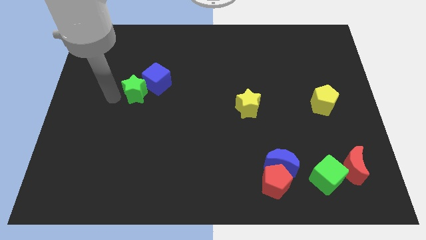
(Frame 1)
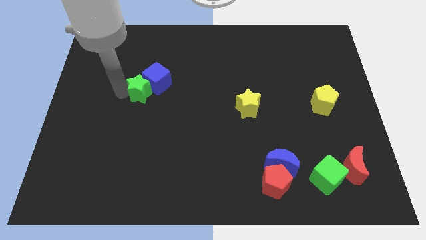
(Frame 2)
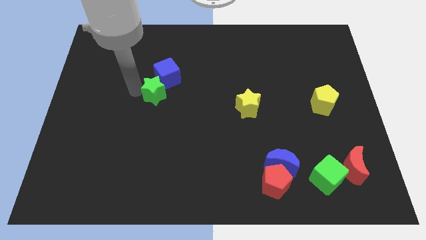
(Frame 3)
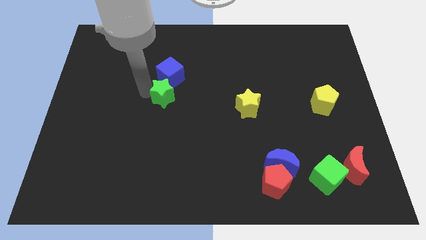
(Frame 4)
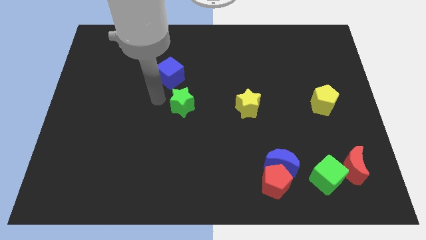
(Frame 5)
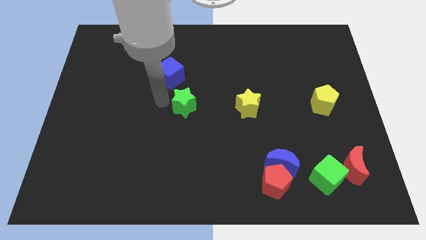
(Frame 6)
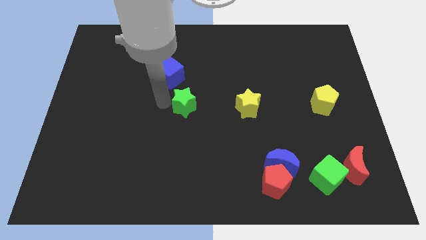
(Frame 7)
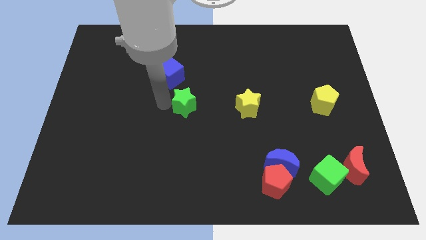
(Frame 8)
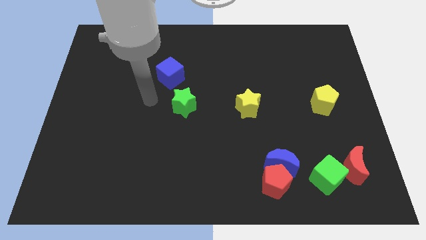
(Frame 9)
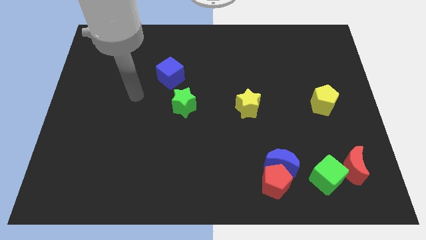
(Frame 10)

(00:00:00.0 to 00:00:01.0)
place the green star below the blue cube

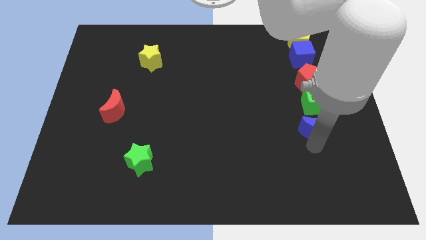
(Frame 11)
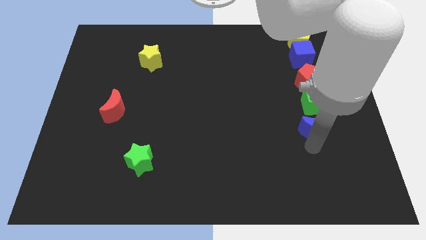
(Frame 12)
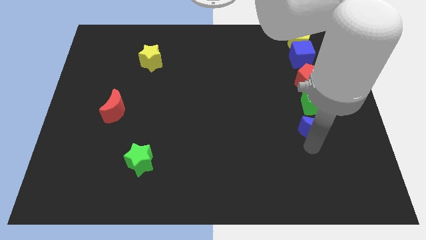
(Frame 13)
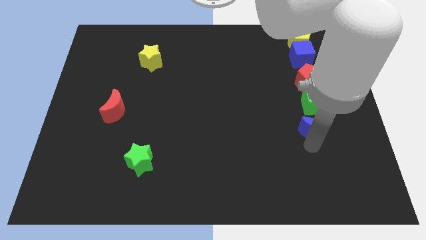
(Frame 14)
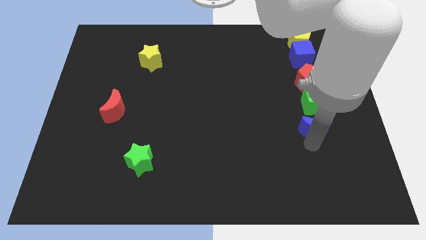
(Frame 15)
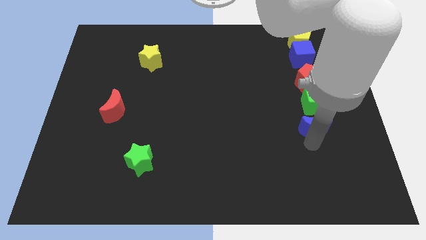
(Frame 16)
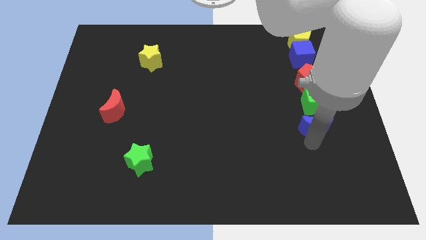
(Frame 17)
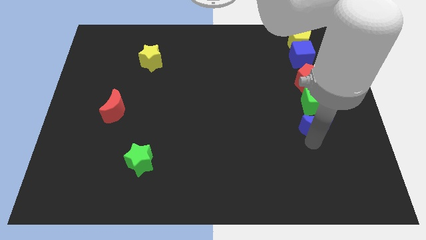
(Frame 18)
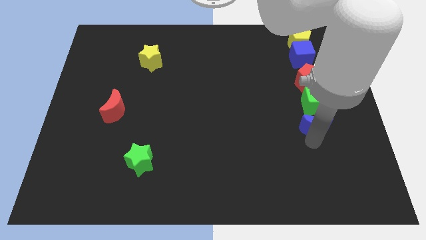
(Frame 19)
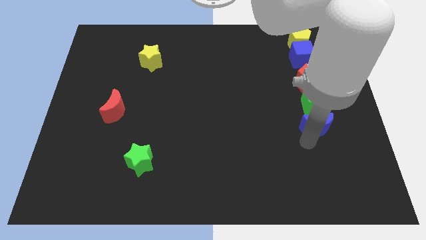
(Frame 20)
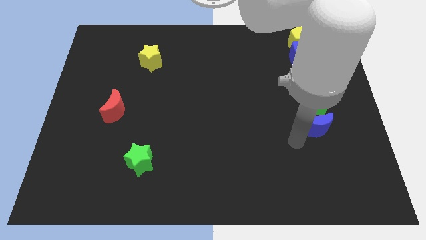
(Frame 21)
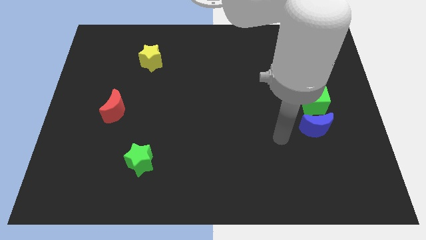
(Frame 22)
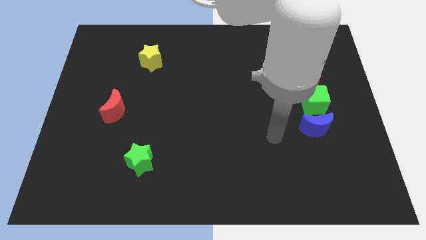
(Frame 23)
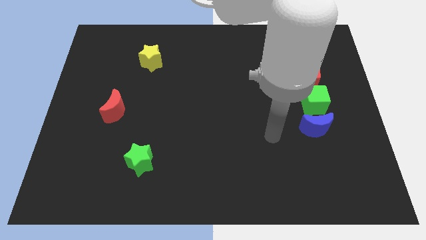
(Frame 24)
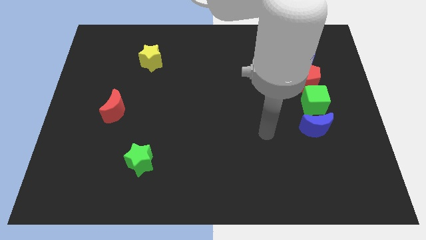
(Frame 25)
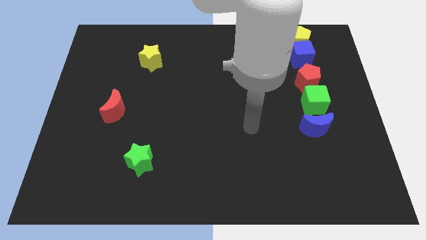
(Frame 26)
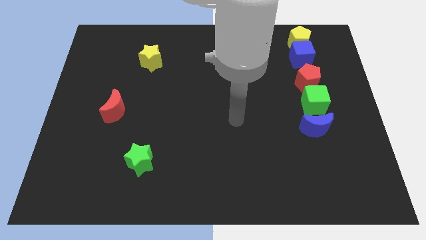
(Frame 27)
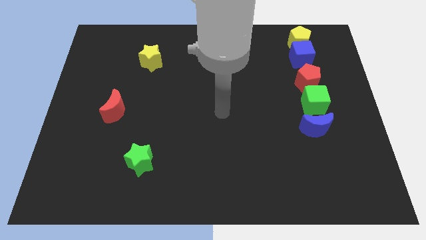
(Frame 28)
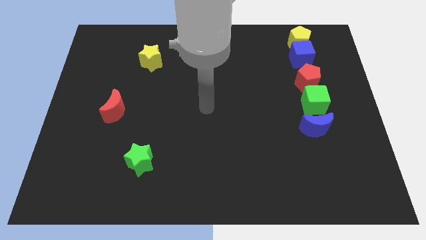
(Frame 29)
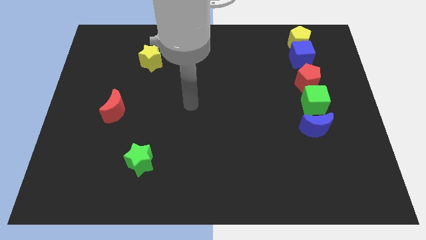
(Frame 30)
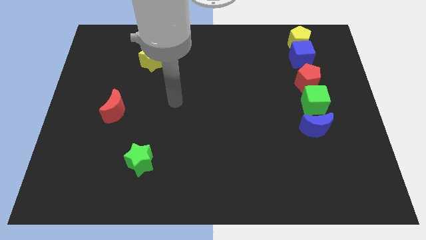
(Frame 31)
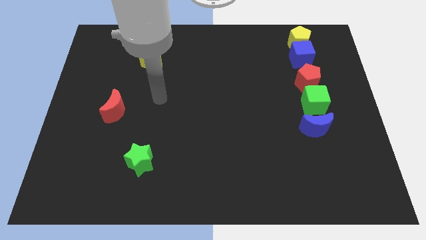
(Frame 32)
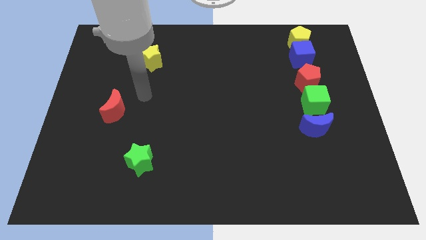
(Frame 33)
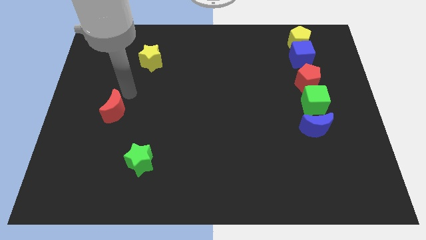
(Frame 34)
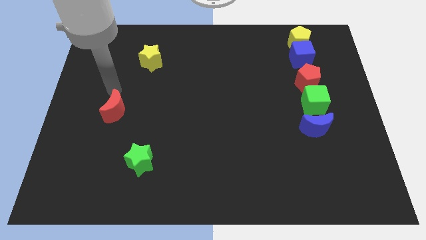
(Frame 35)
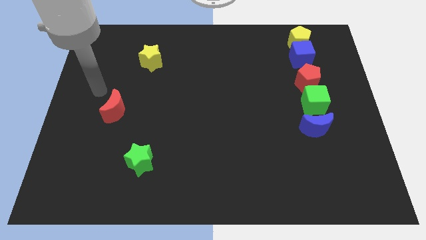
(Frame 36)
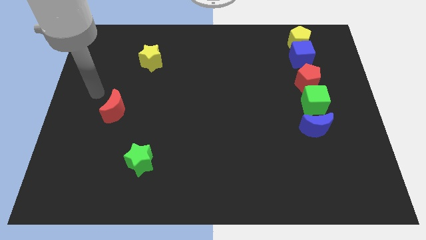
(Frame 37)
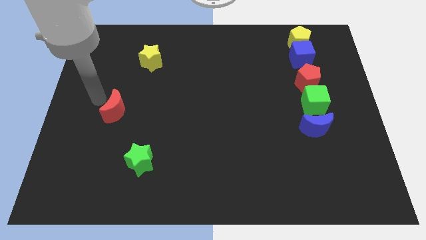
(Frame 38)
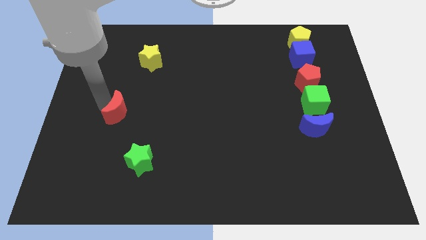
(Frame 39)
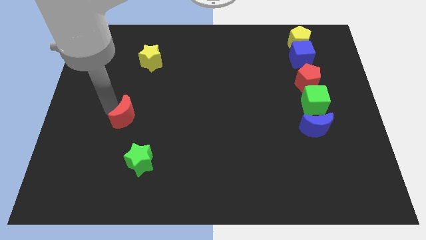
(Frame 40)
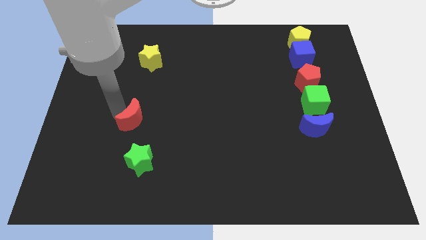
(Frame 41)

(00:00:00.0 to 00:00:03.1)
go near red moon

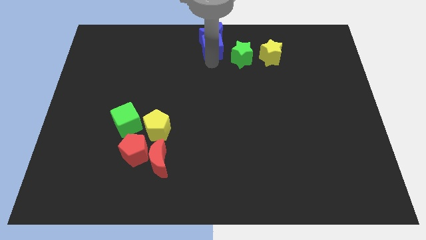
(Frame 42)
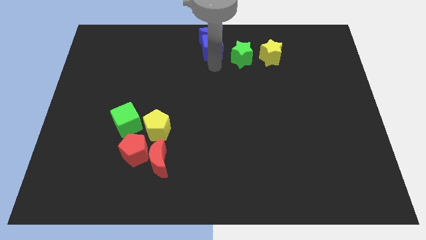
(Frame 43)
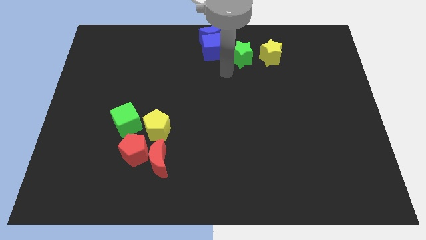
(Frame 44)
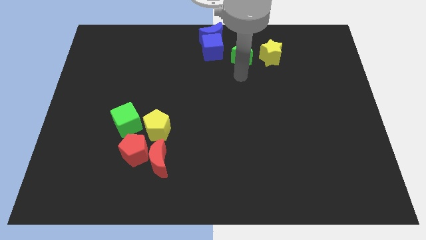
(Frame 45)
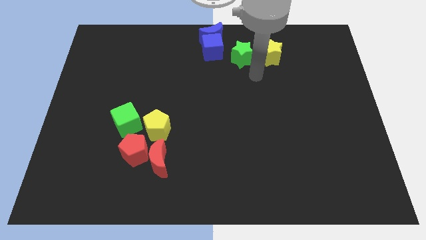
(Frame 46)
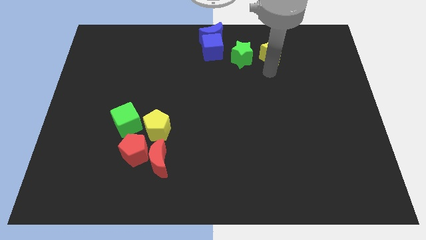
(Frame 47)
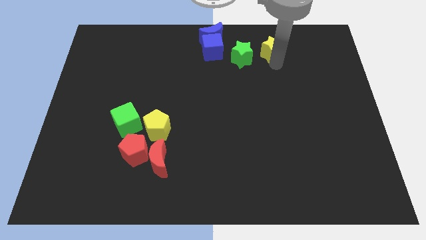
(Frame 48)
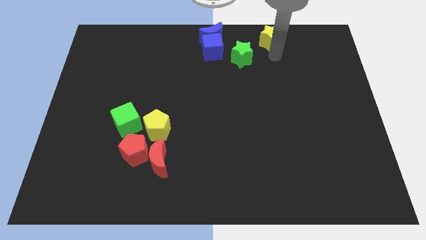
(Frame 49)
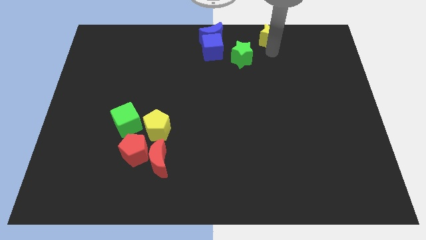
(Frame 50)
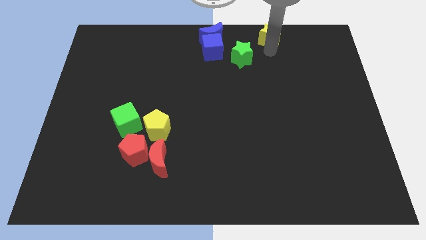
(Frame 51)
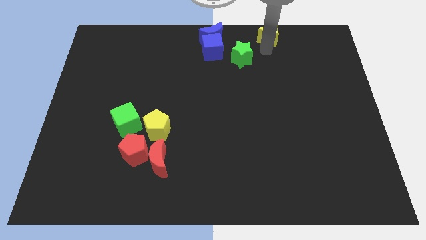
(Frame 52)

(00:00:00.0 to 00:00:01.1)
slide the yellow star slightly to the top side of the board

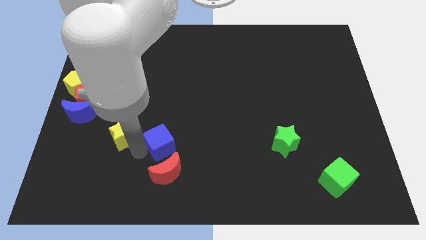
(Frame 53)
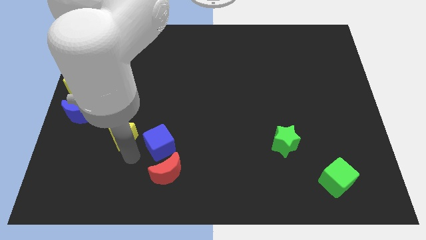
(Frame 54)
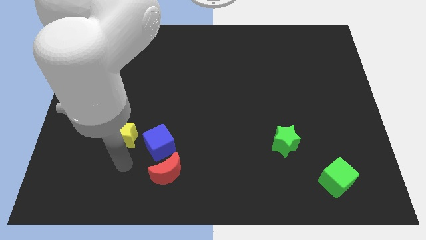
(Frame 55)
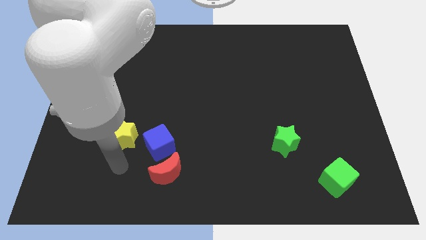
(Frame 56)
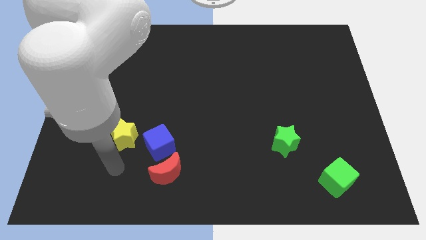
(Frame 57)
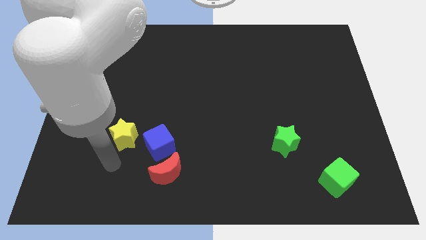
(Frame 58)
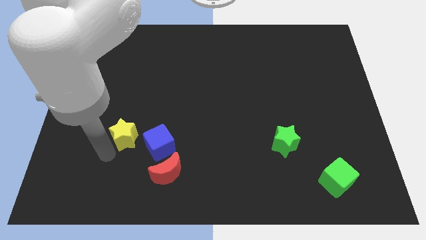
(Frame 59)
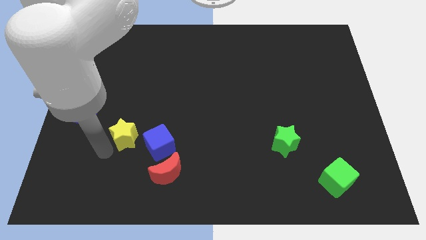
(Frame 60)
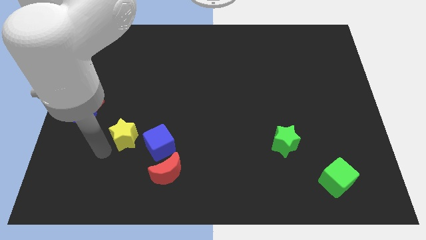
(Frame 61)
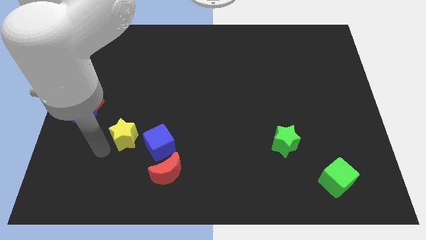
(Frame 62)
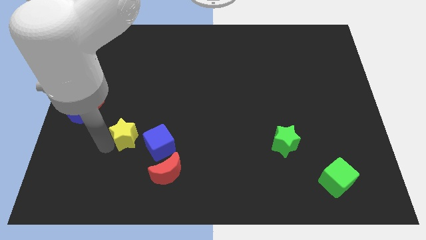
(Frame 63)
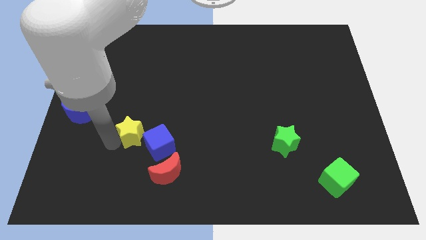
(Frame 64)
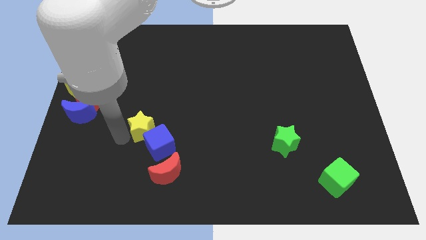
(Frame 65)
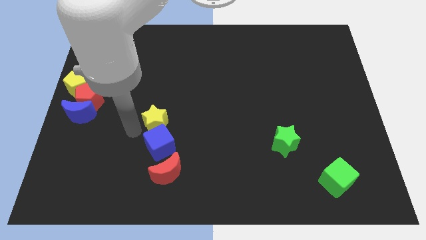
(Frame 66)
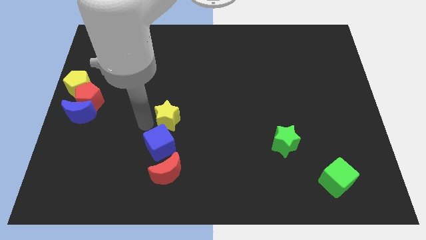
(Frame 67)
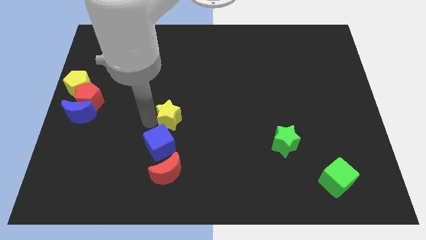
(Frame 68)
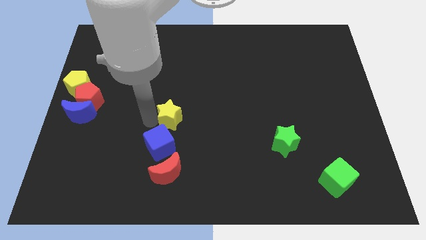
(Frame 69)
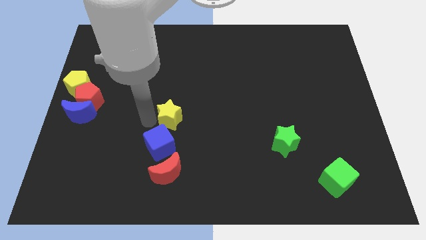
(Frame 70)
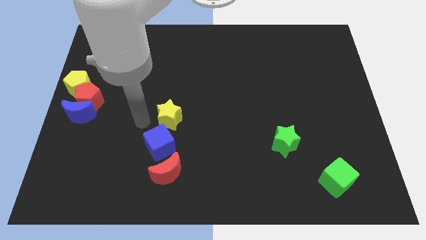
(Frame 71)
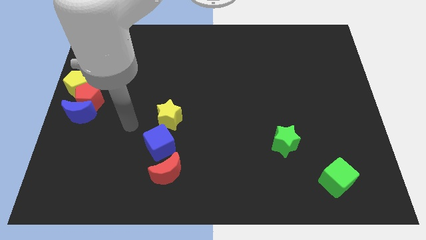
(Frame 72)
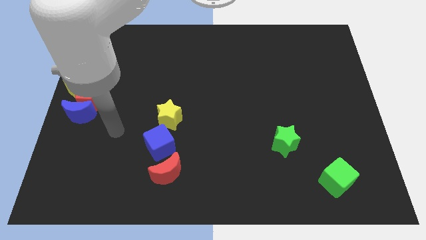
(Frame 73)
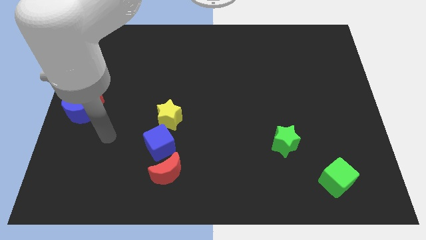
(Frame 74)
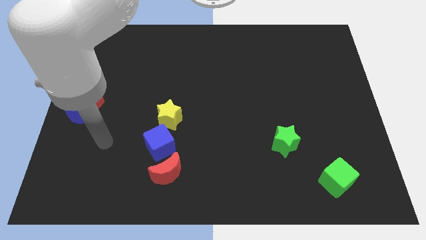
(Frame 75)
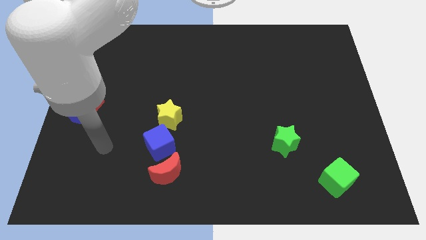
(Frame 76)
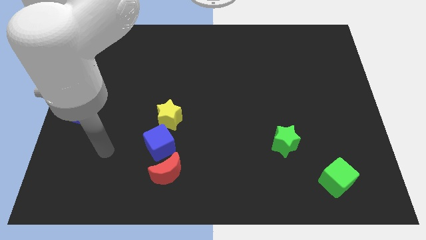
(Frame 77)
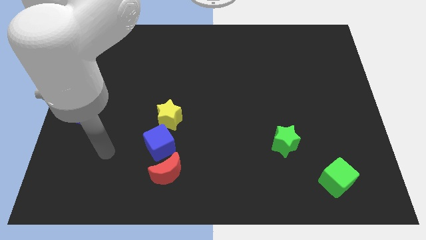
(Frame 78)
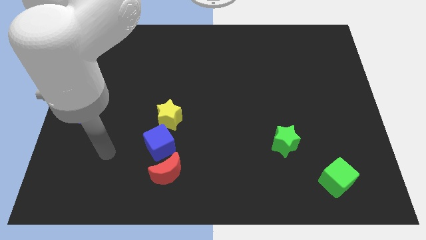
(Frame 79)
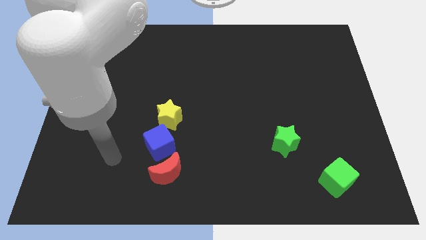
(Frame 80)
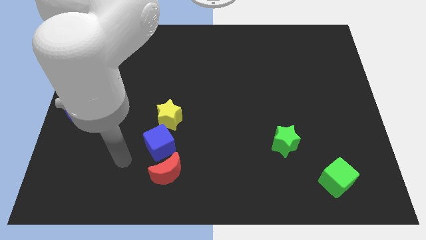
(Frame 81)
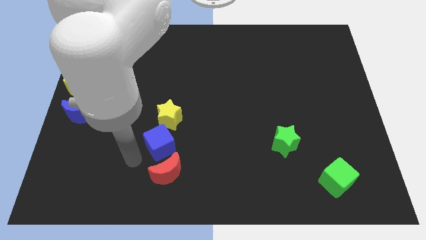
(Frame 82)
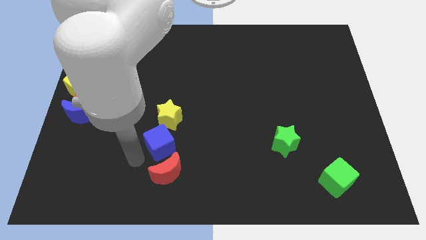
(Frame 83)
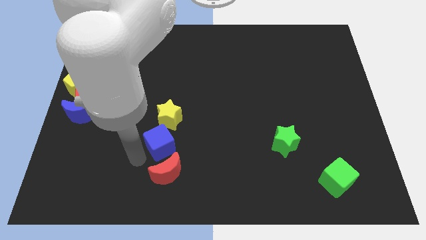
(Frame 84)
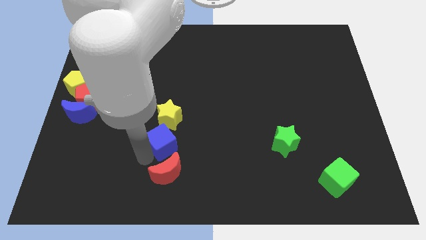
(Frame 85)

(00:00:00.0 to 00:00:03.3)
place the yellow star vertically above the blue cube

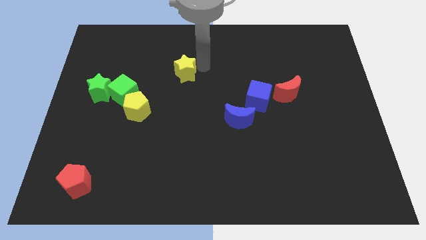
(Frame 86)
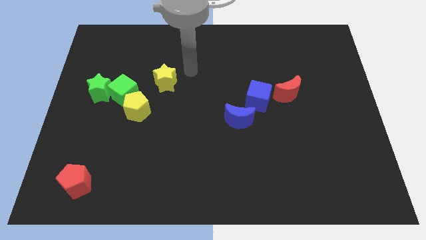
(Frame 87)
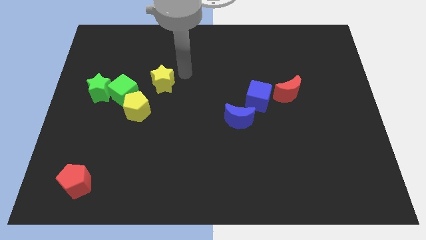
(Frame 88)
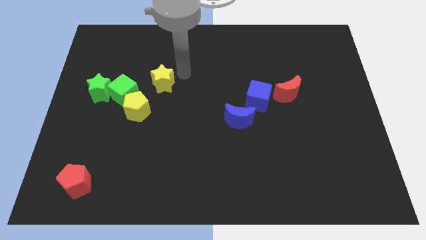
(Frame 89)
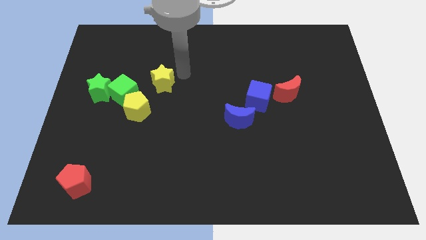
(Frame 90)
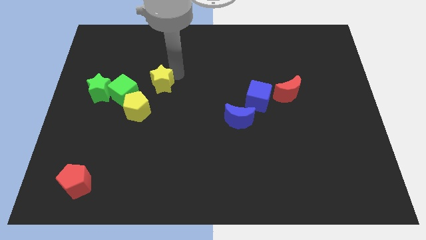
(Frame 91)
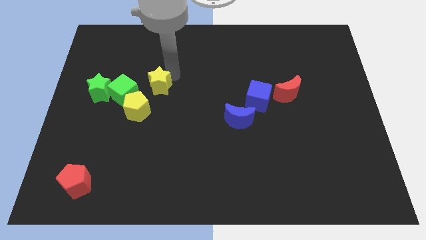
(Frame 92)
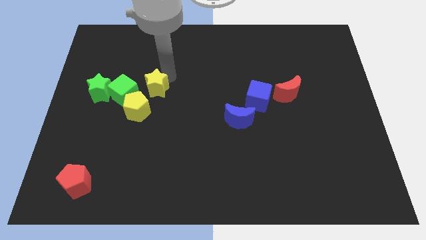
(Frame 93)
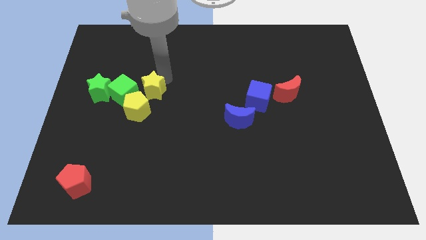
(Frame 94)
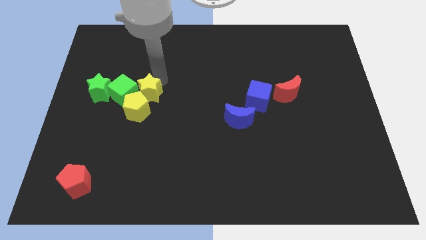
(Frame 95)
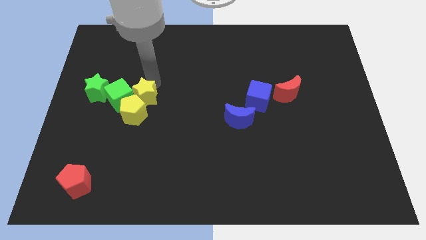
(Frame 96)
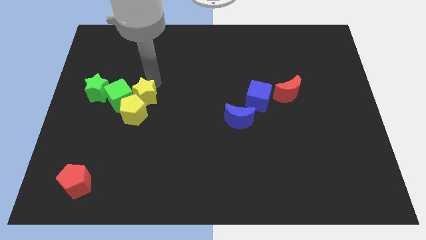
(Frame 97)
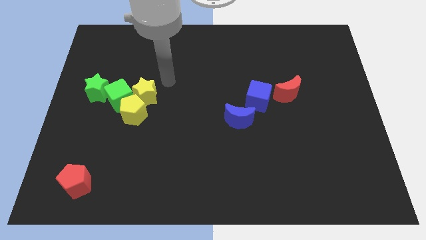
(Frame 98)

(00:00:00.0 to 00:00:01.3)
move the yellow star close to the group of the block
